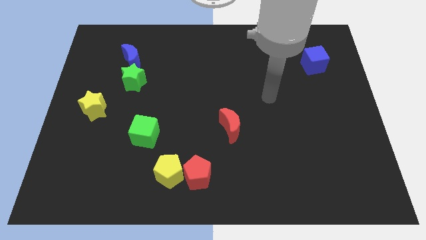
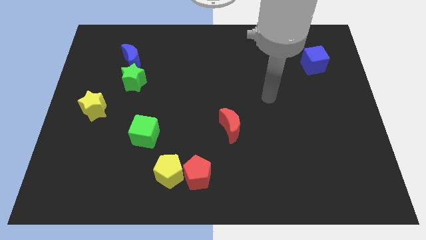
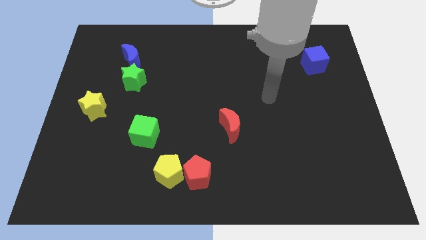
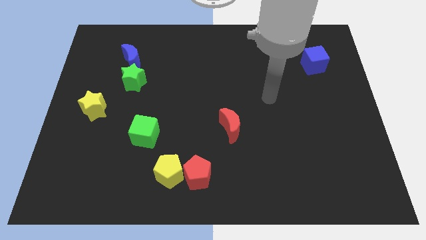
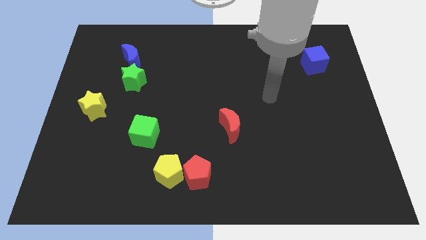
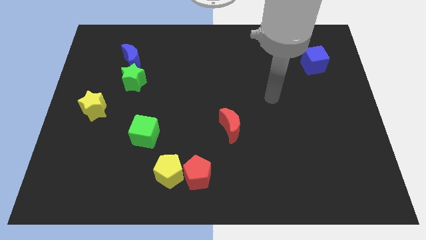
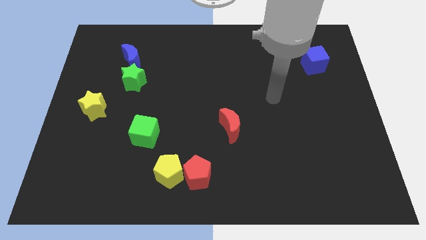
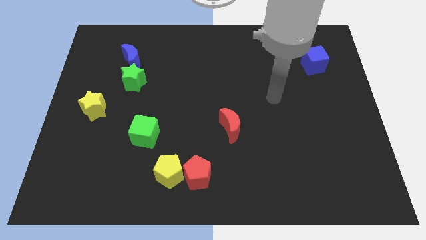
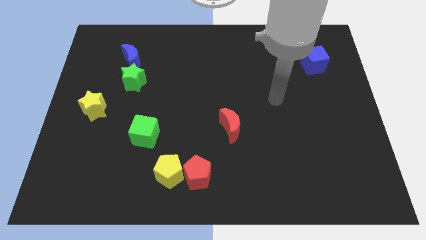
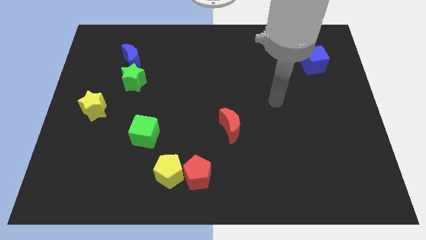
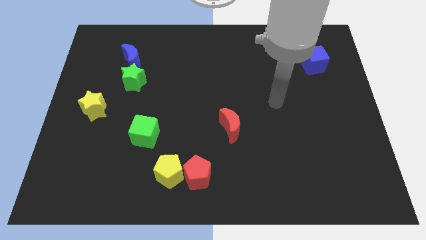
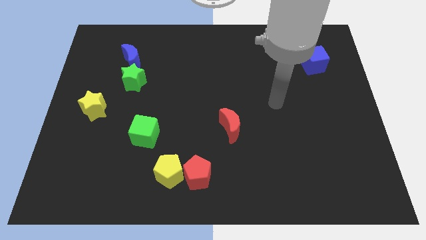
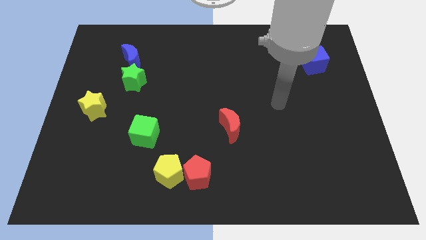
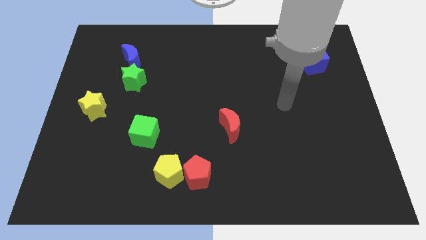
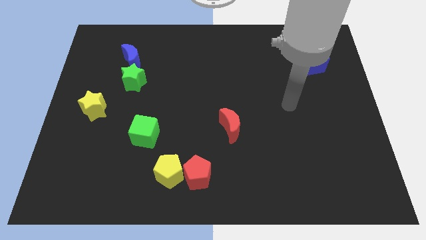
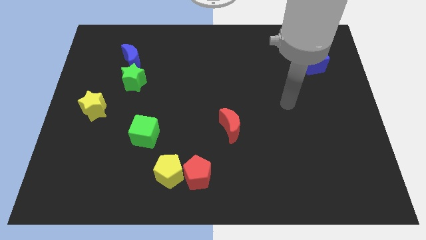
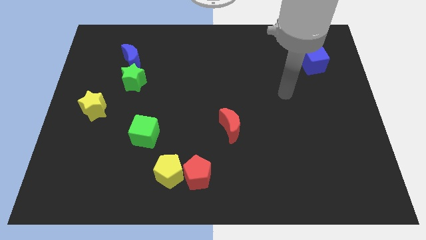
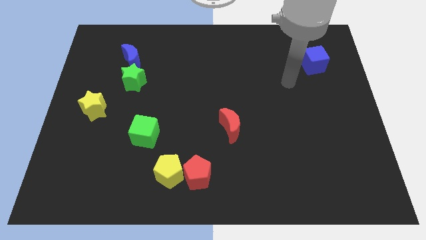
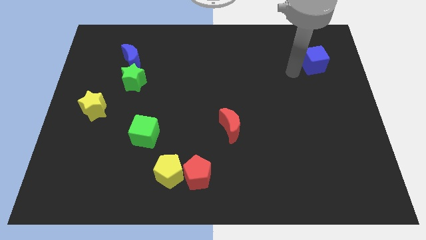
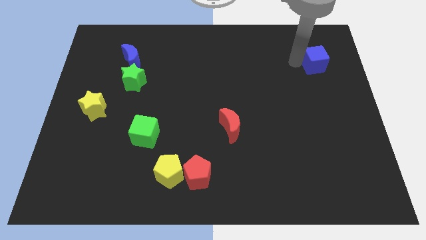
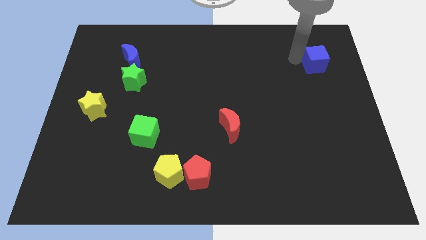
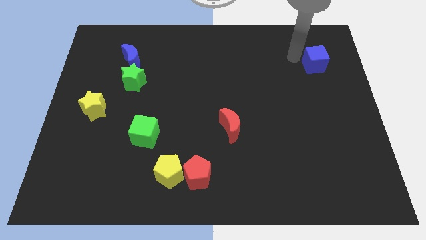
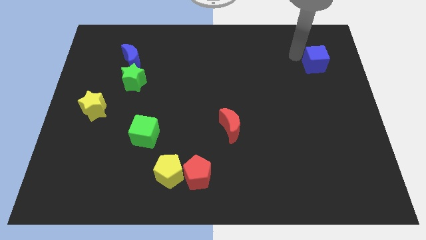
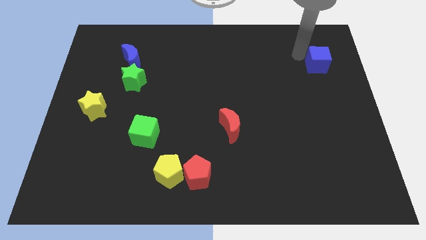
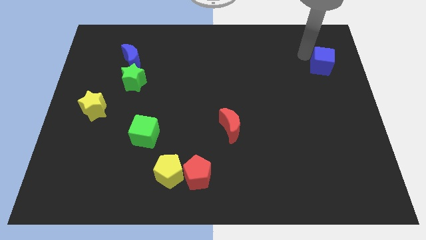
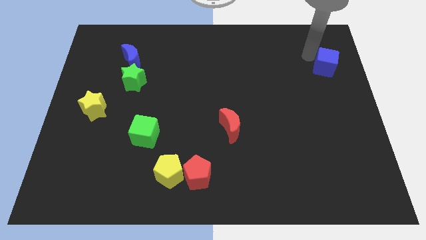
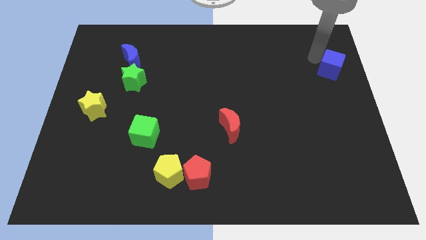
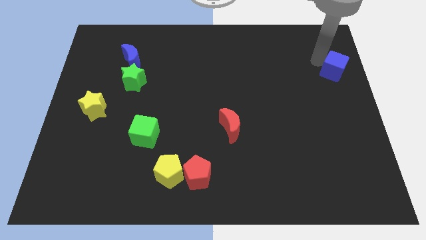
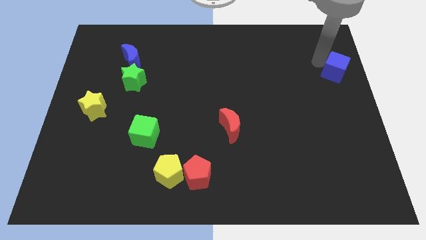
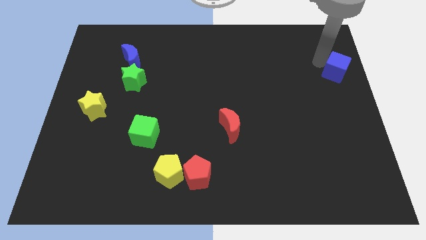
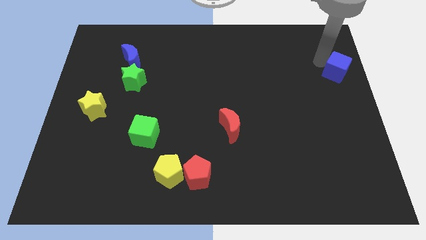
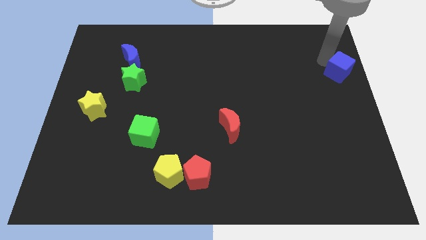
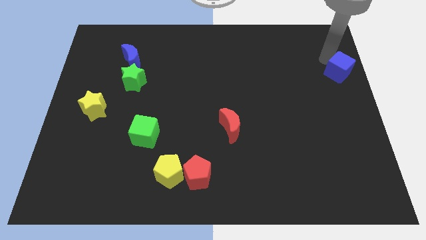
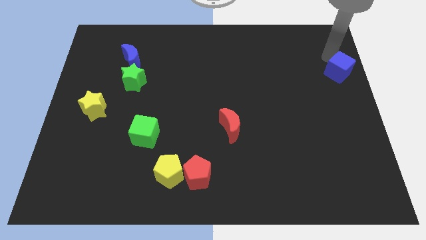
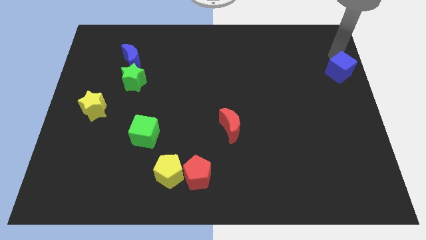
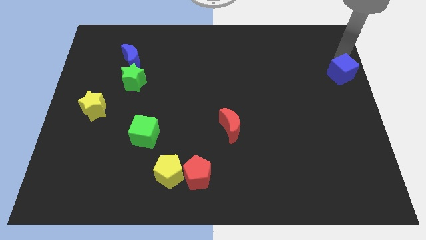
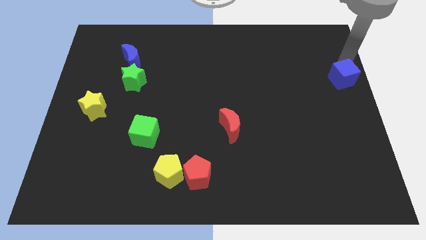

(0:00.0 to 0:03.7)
push blue block towards thr right center of the board

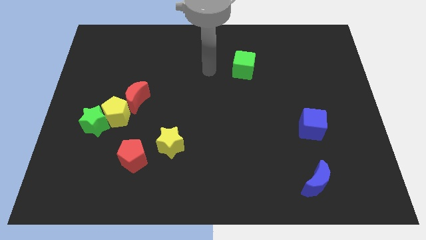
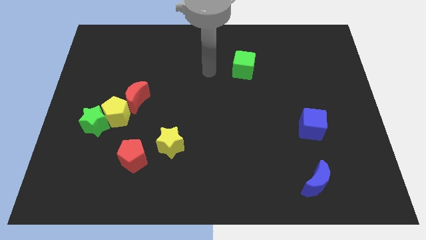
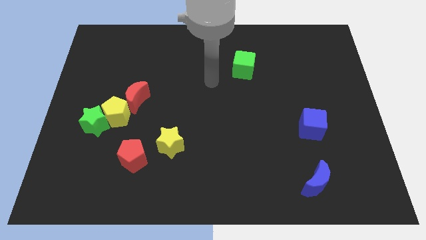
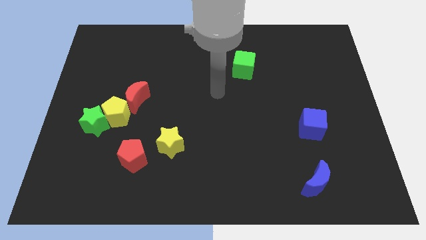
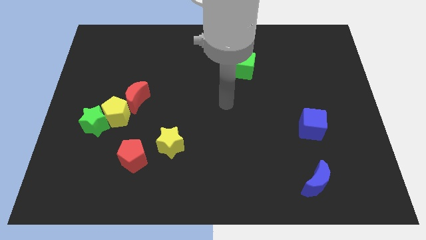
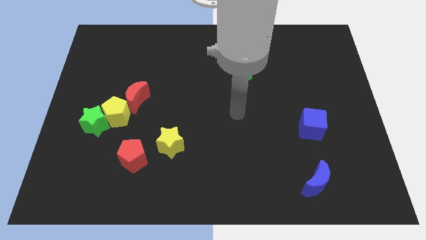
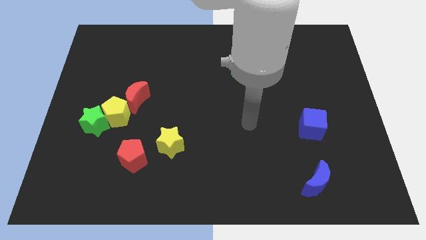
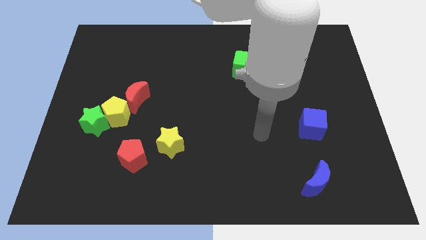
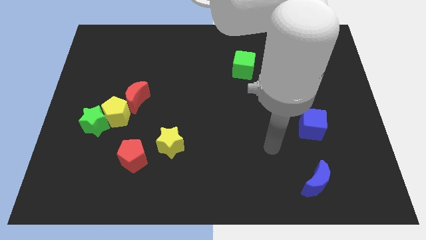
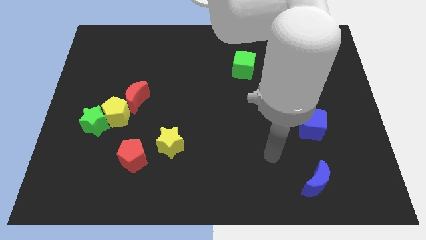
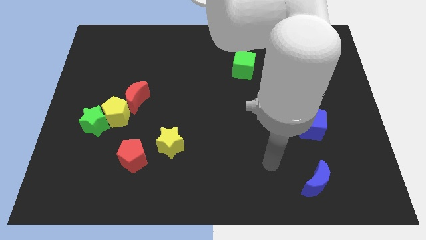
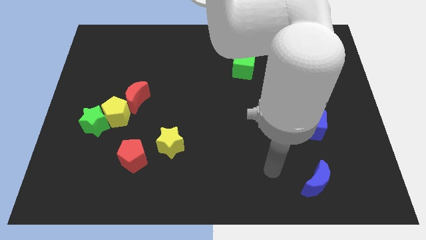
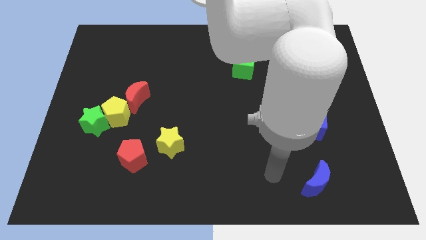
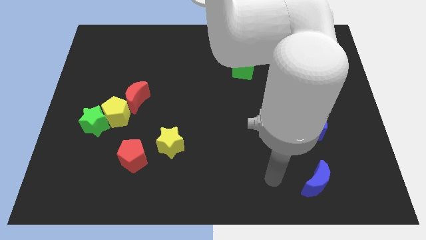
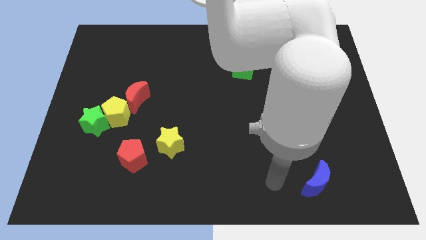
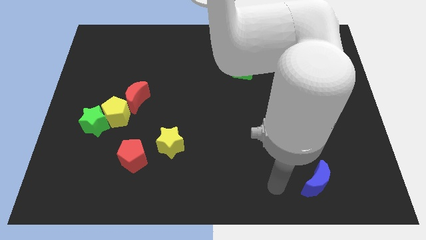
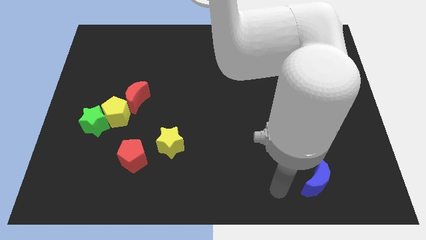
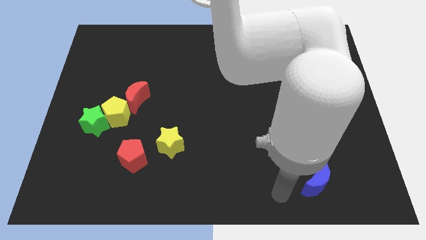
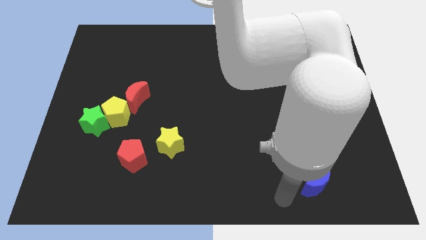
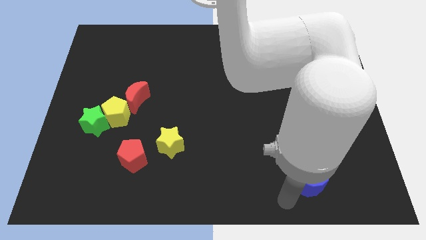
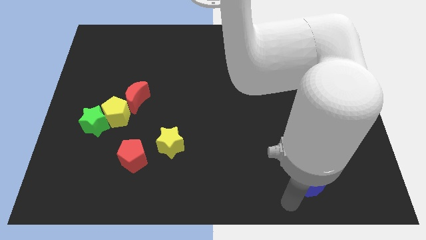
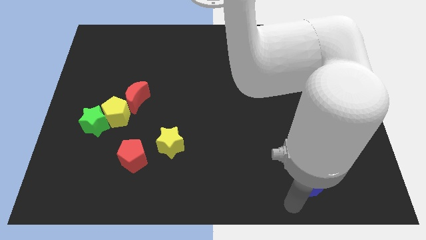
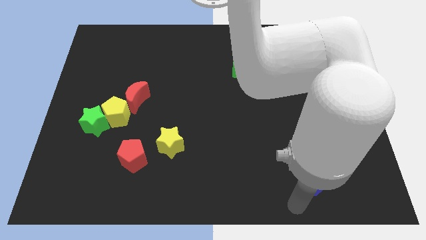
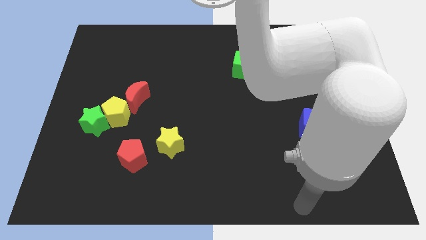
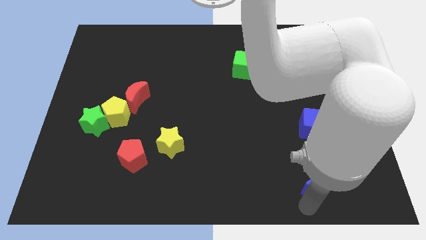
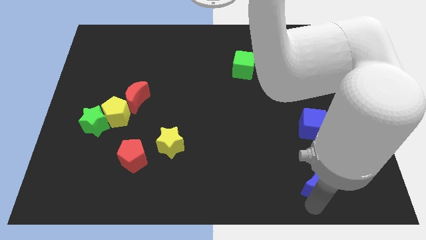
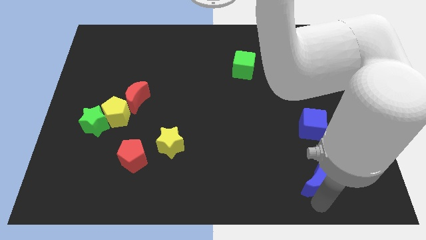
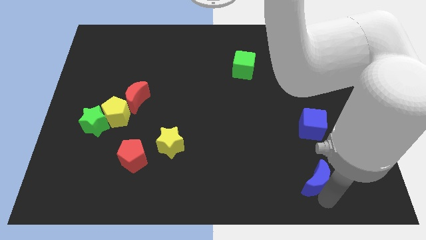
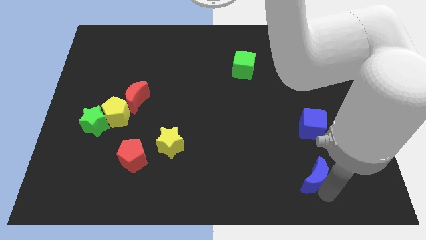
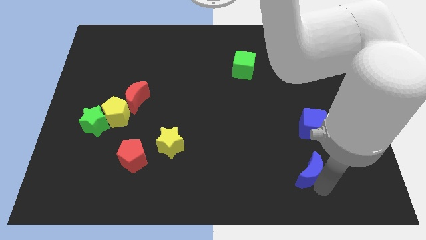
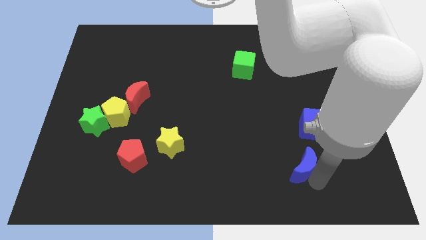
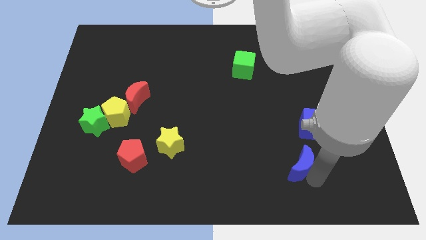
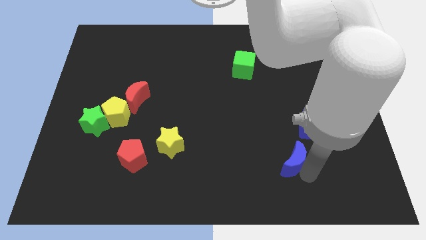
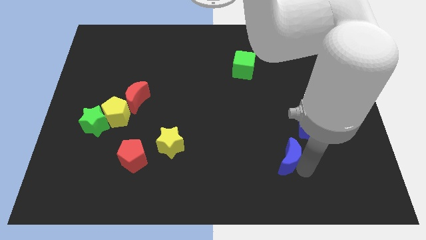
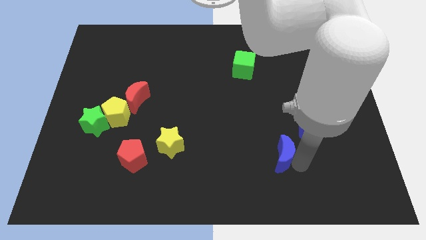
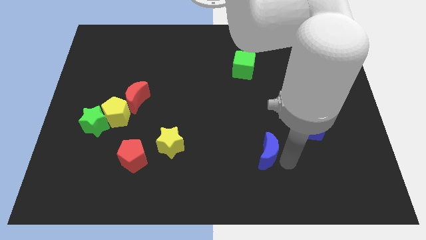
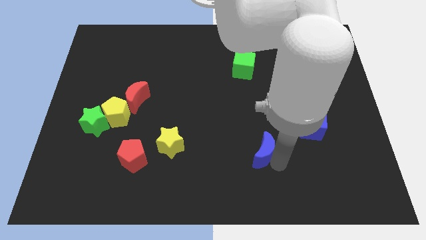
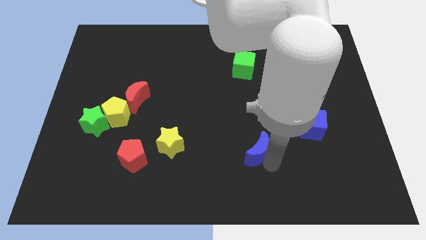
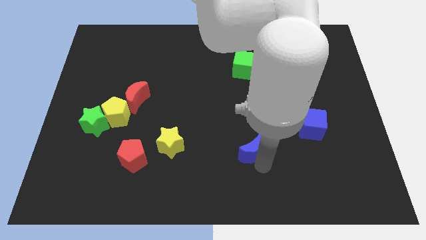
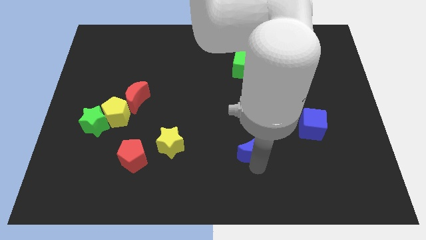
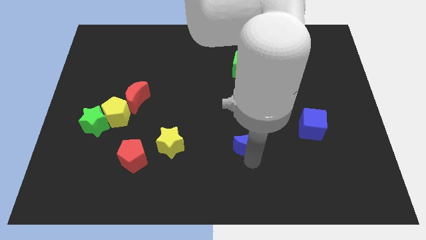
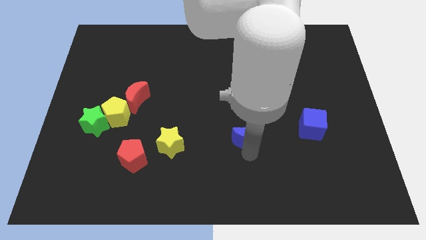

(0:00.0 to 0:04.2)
move blue cube towards center

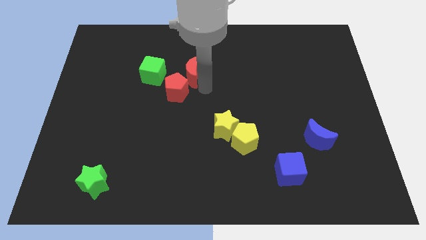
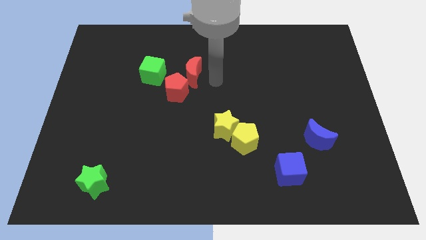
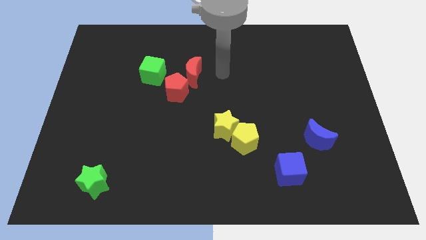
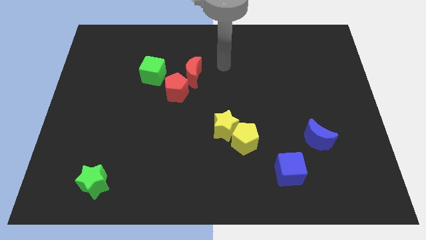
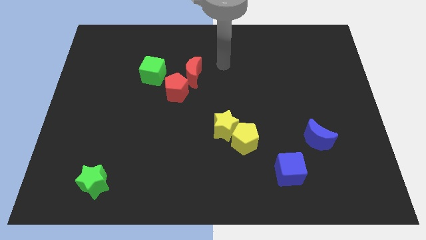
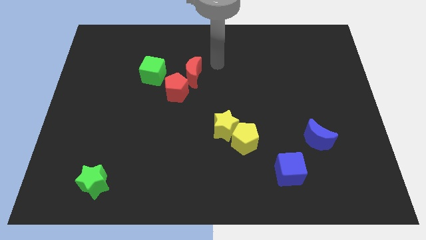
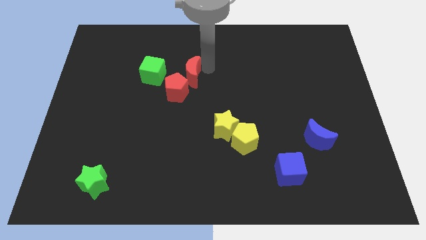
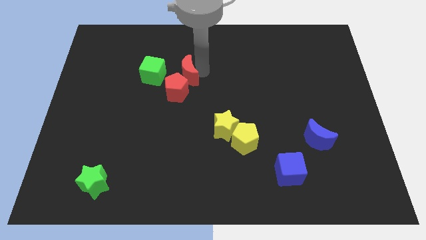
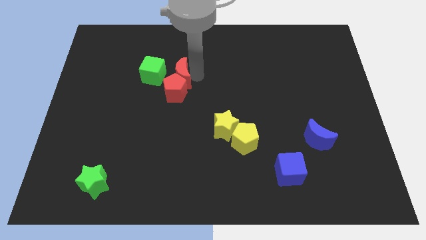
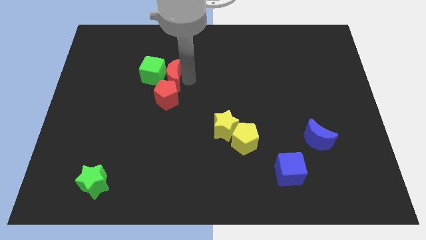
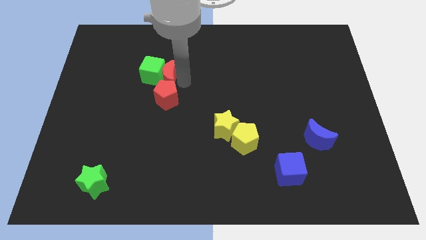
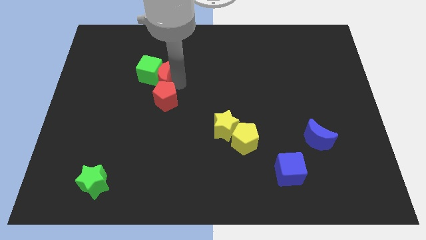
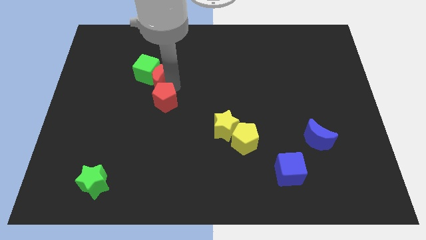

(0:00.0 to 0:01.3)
push the red crescent into the green cube
